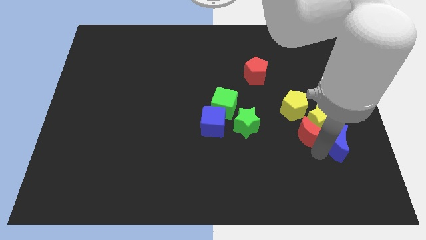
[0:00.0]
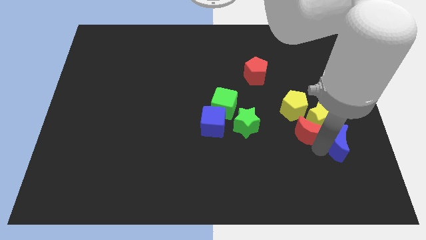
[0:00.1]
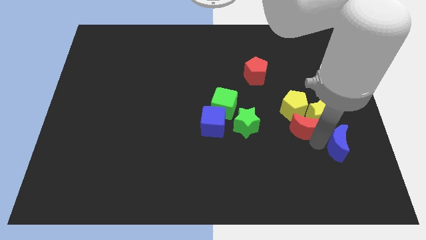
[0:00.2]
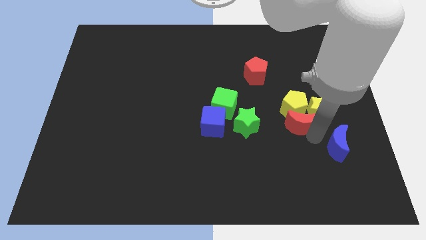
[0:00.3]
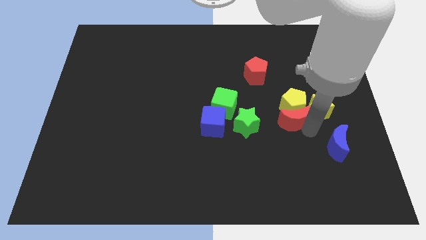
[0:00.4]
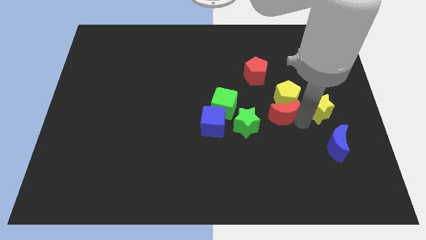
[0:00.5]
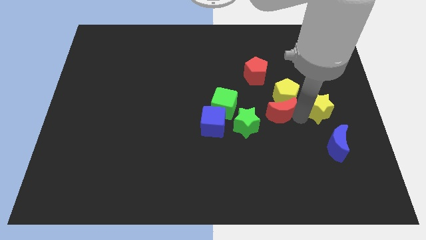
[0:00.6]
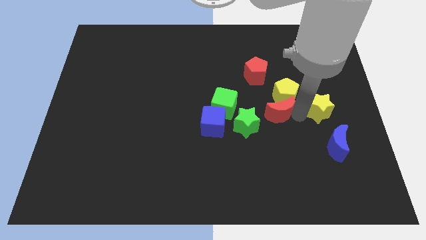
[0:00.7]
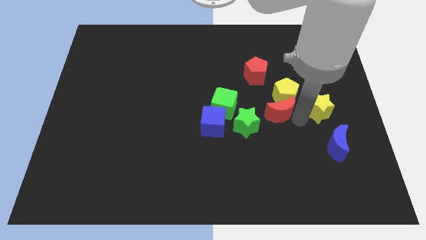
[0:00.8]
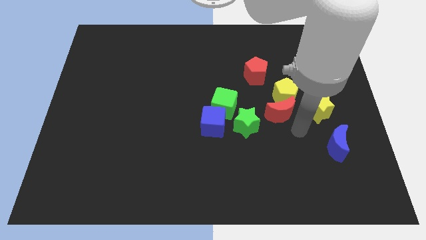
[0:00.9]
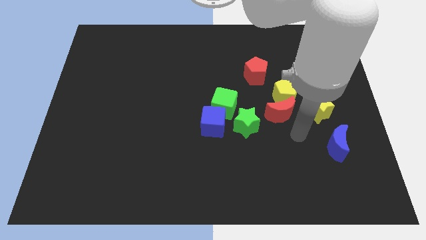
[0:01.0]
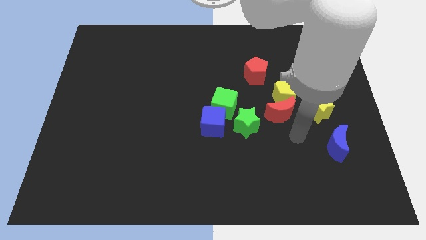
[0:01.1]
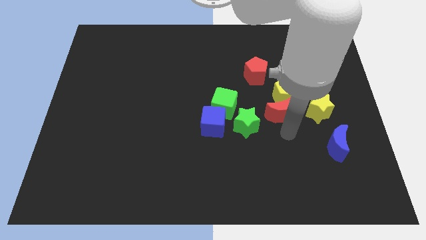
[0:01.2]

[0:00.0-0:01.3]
separate group of blocks from blue moon

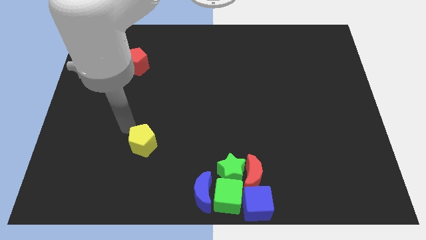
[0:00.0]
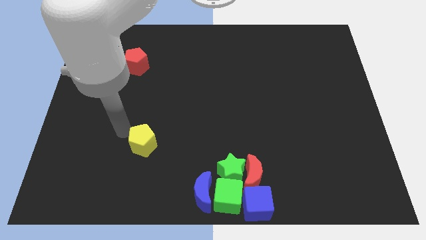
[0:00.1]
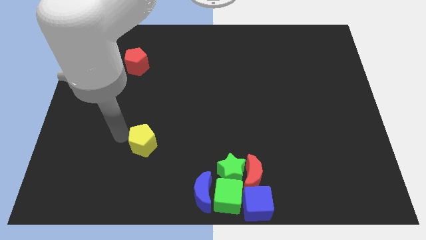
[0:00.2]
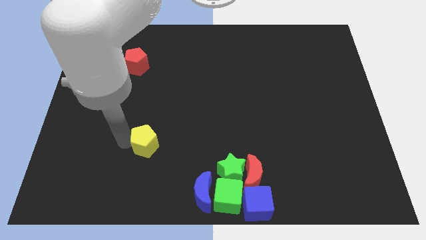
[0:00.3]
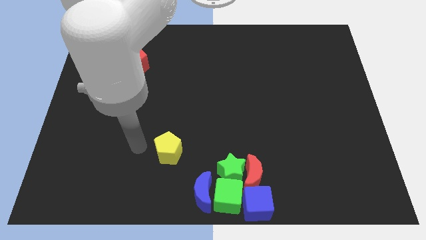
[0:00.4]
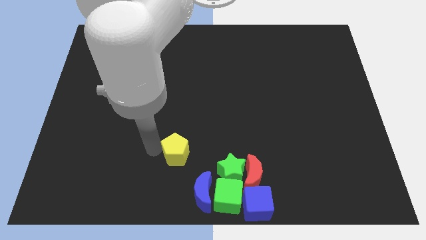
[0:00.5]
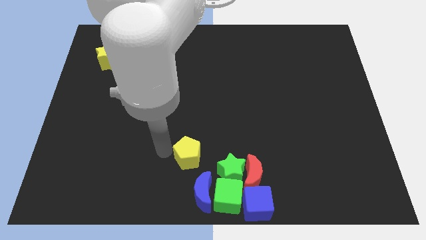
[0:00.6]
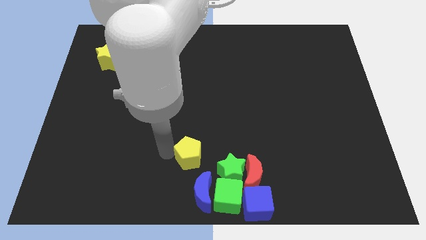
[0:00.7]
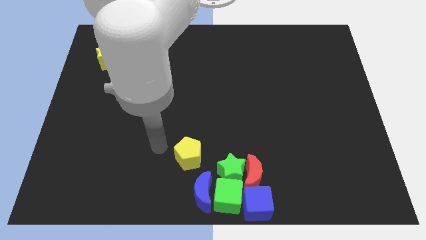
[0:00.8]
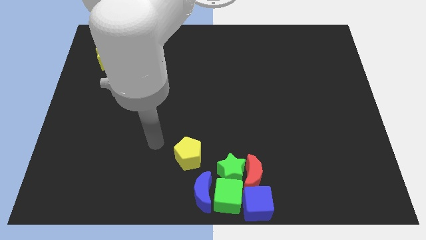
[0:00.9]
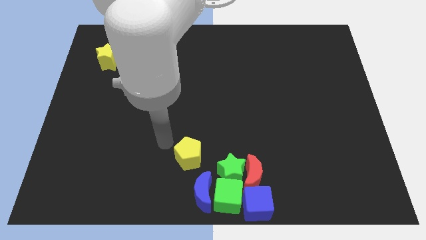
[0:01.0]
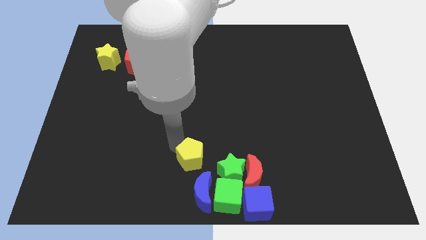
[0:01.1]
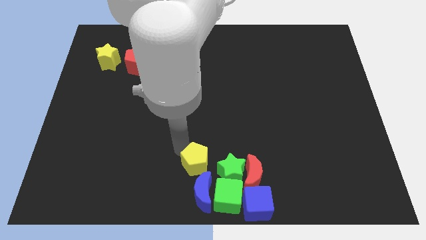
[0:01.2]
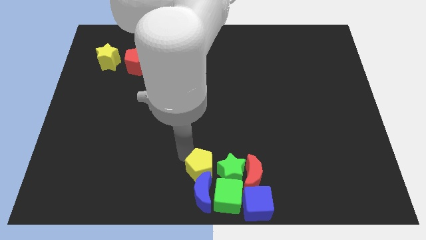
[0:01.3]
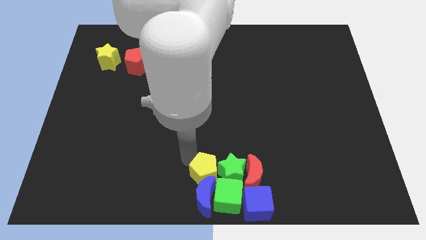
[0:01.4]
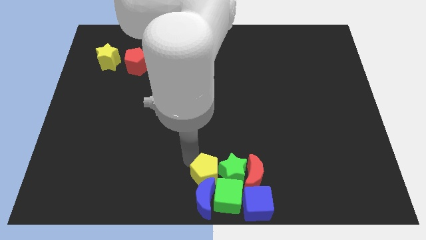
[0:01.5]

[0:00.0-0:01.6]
push the yellow pentagon into the blue crescent

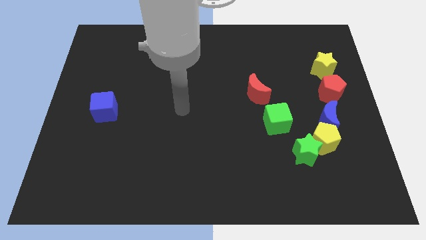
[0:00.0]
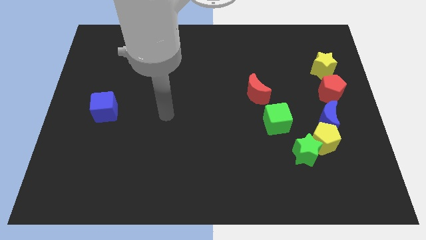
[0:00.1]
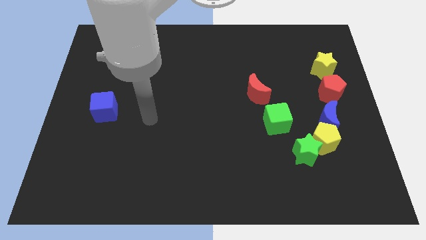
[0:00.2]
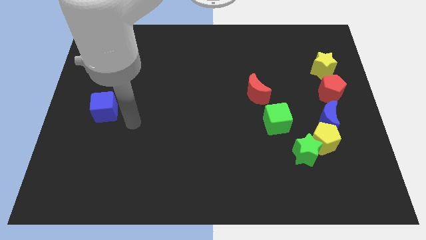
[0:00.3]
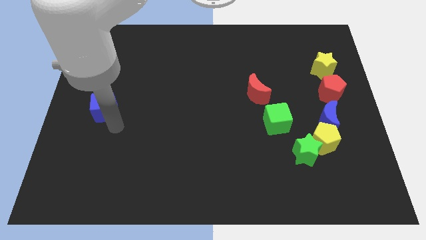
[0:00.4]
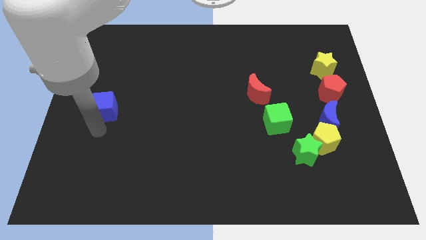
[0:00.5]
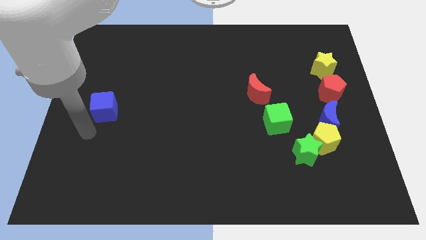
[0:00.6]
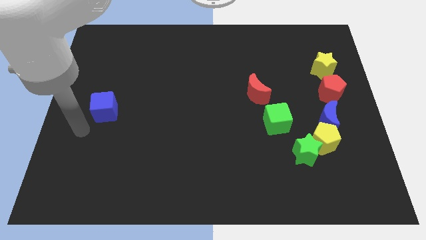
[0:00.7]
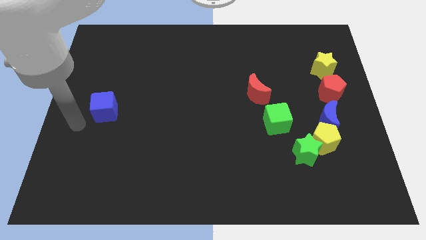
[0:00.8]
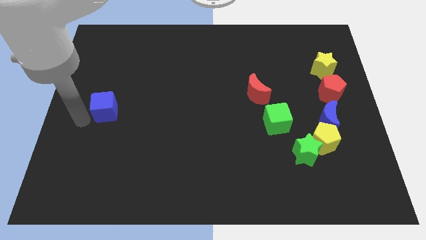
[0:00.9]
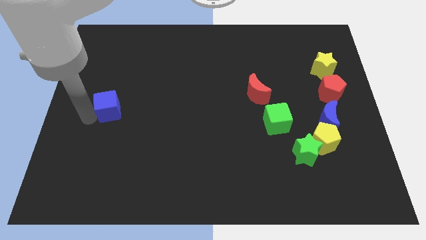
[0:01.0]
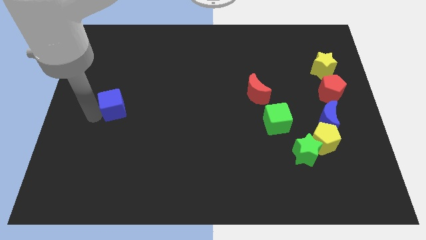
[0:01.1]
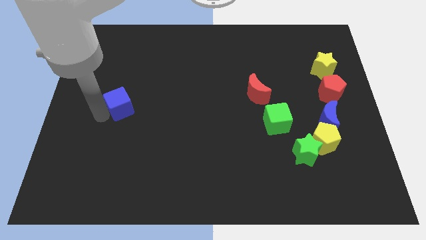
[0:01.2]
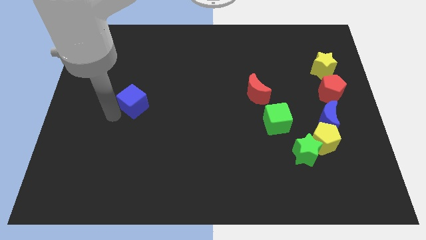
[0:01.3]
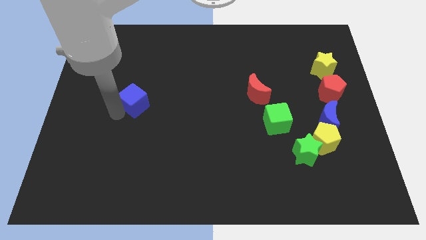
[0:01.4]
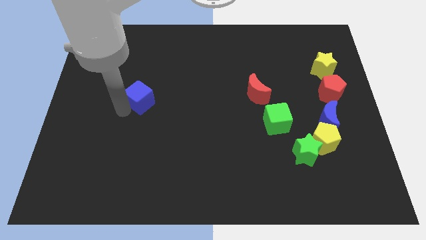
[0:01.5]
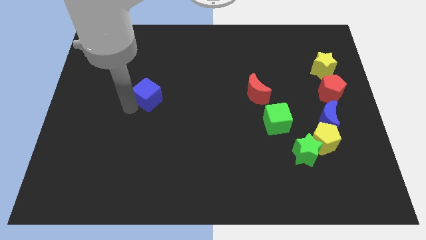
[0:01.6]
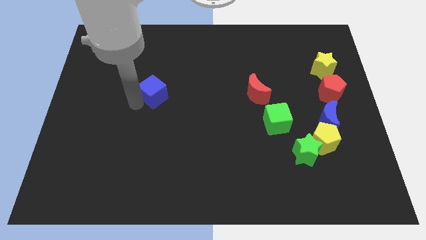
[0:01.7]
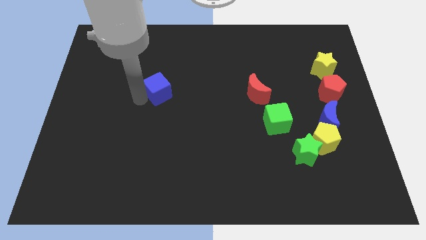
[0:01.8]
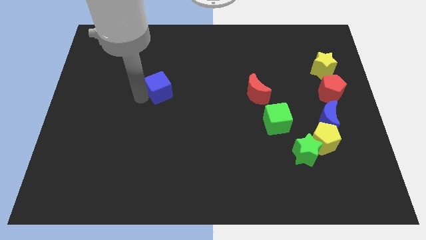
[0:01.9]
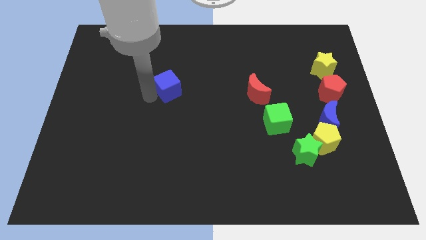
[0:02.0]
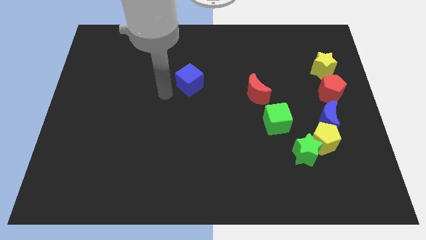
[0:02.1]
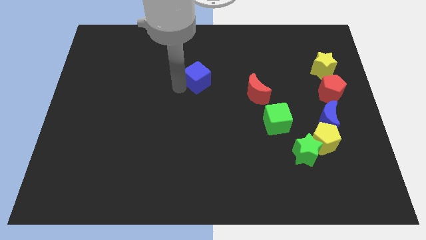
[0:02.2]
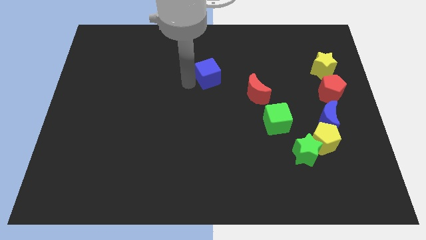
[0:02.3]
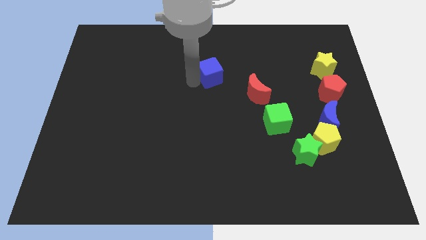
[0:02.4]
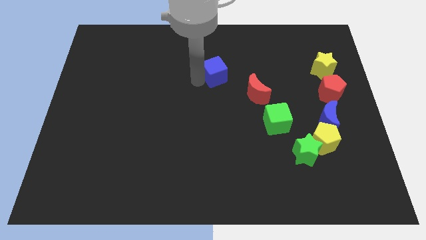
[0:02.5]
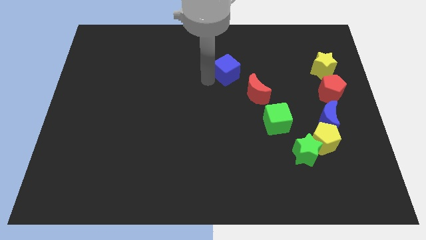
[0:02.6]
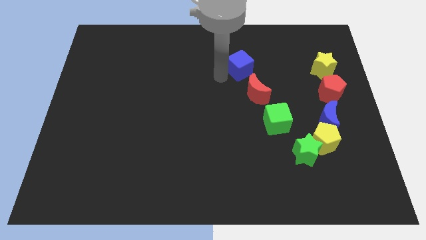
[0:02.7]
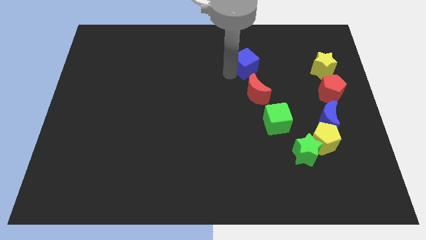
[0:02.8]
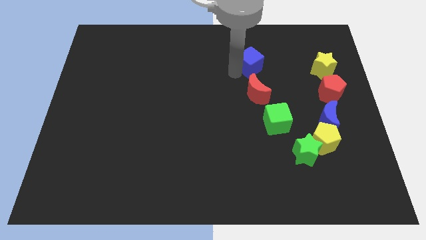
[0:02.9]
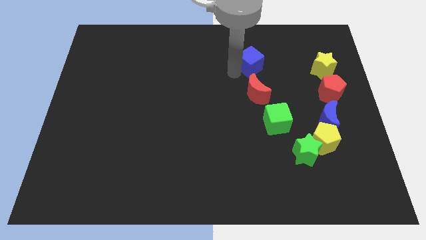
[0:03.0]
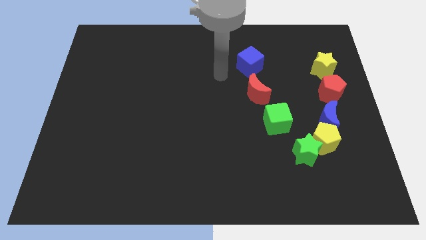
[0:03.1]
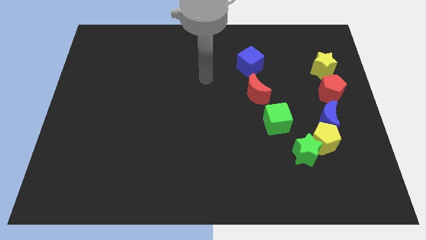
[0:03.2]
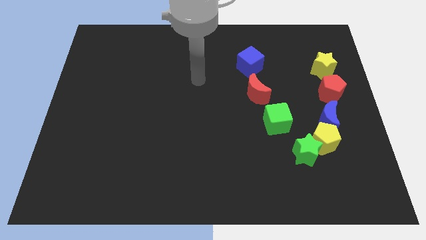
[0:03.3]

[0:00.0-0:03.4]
move blue cube towards the top right of the board

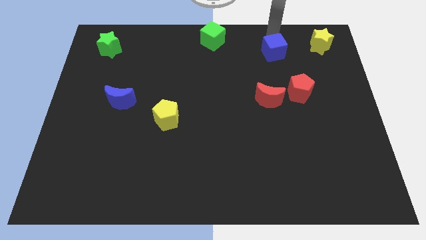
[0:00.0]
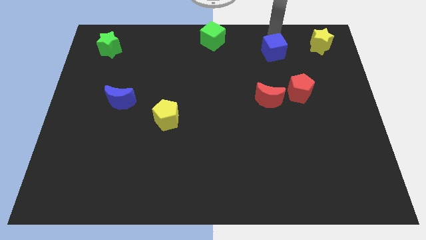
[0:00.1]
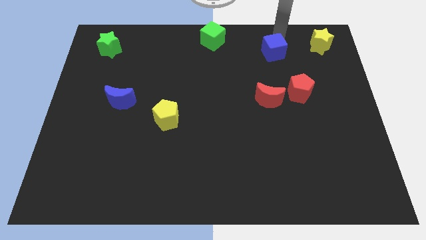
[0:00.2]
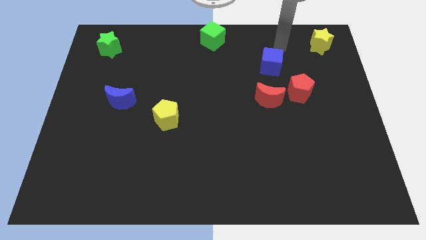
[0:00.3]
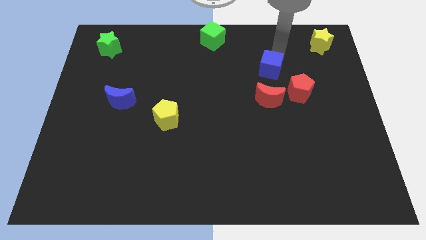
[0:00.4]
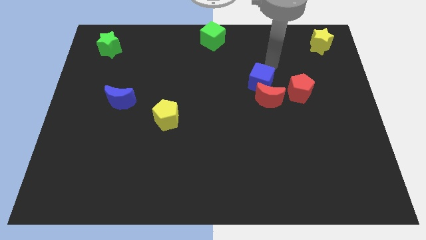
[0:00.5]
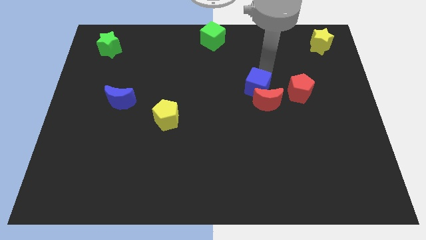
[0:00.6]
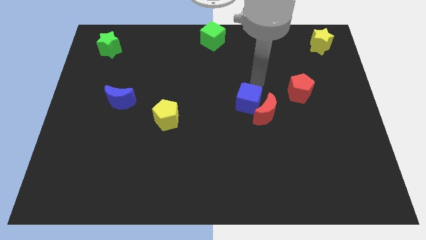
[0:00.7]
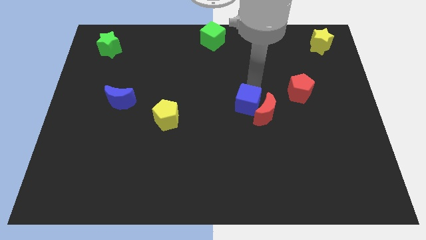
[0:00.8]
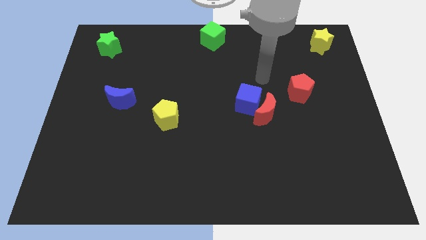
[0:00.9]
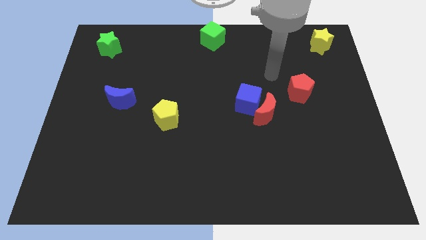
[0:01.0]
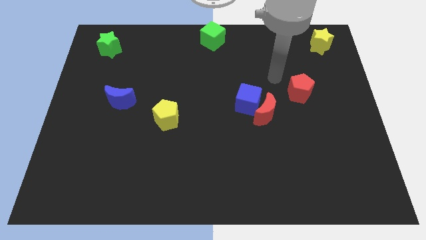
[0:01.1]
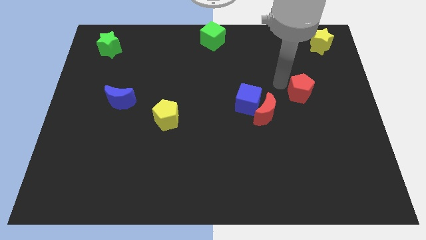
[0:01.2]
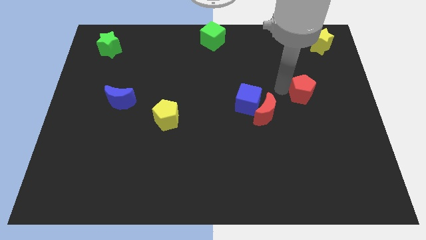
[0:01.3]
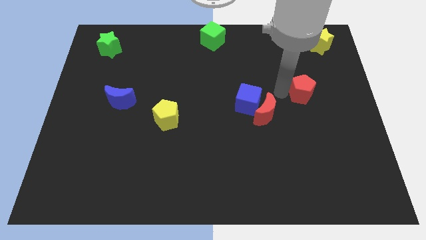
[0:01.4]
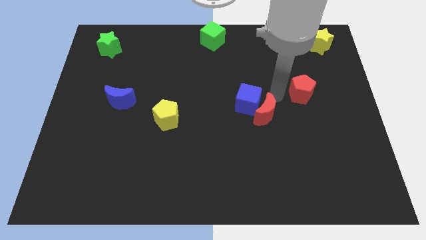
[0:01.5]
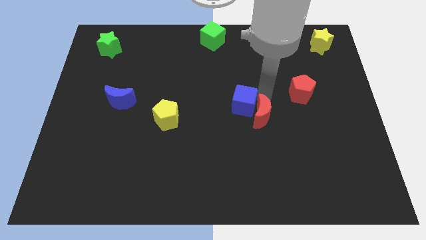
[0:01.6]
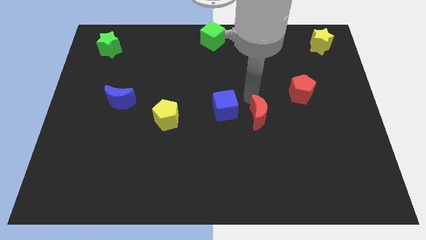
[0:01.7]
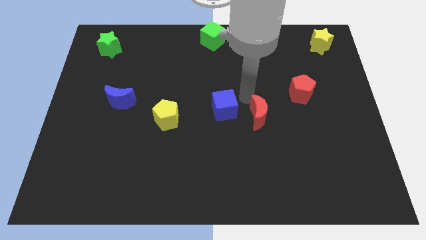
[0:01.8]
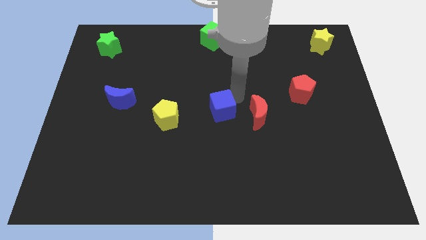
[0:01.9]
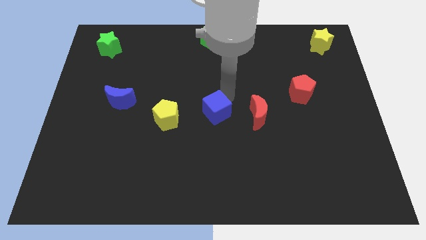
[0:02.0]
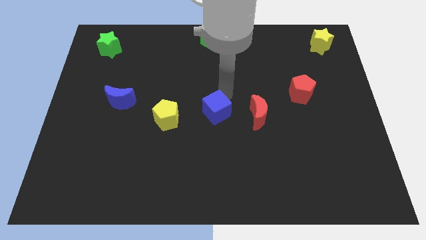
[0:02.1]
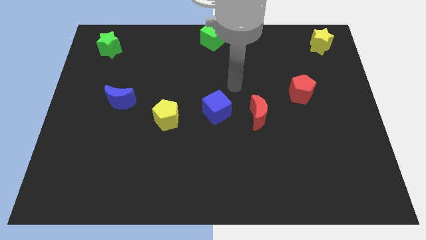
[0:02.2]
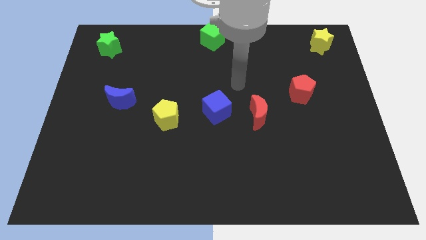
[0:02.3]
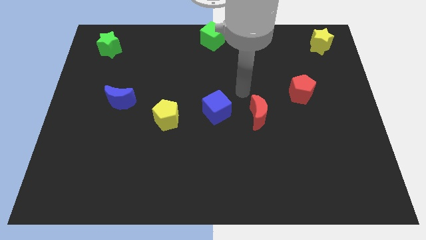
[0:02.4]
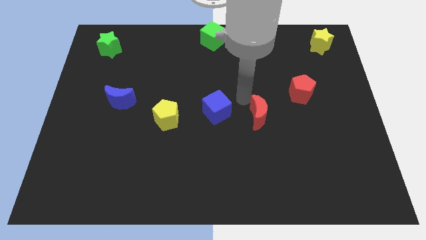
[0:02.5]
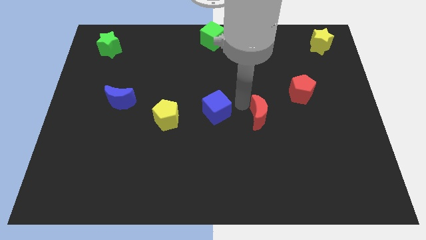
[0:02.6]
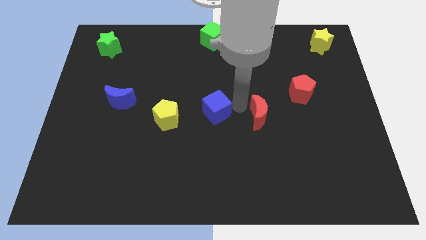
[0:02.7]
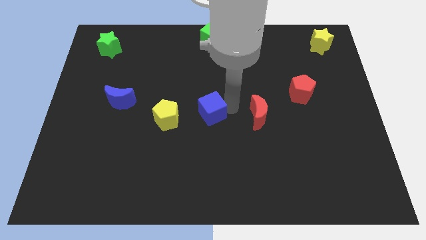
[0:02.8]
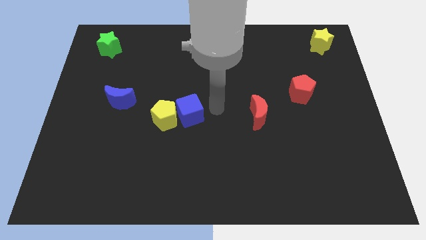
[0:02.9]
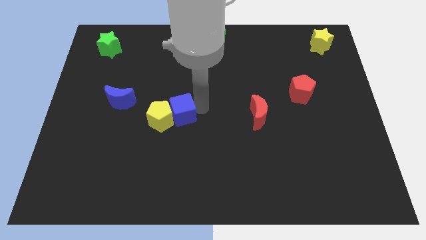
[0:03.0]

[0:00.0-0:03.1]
add blue cube into yellow pentagon
